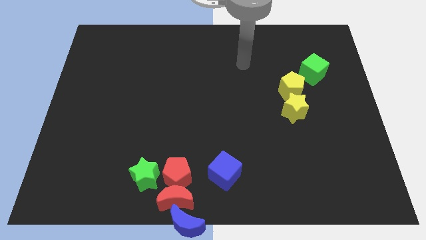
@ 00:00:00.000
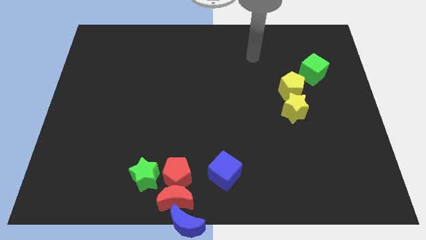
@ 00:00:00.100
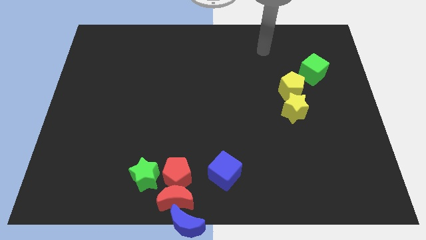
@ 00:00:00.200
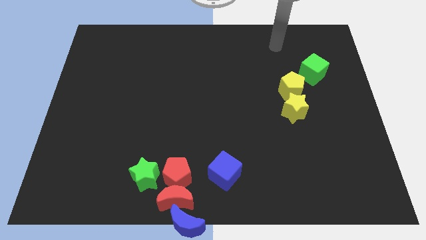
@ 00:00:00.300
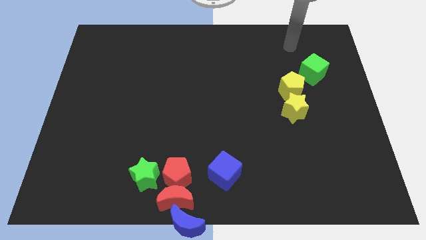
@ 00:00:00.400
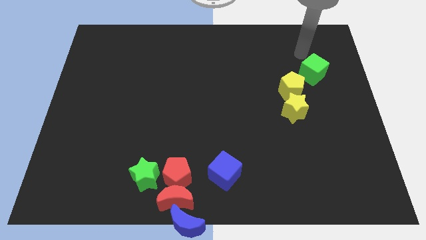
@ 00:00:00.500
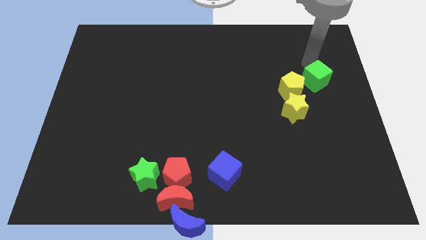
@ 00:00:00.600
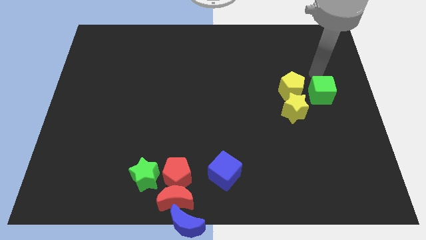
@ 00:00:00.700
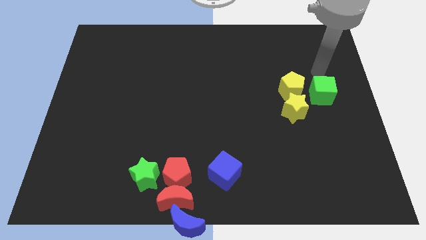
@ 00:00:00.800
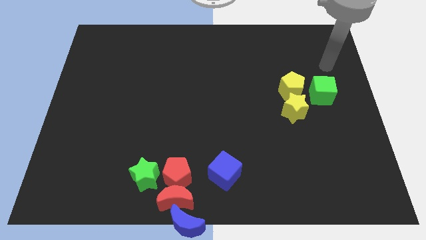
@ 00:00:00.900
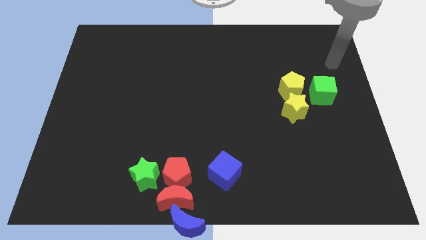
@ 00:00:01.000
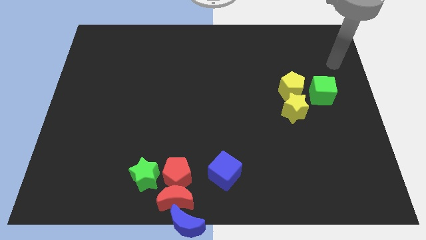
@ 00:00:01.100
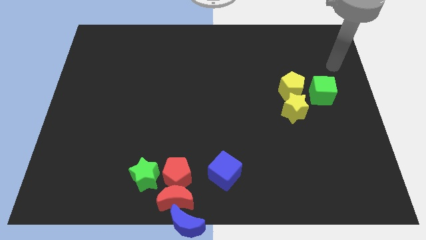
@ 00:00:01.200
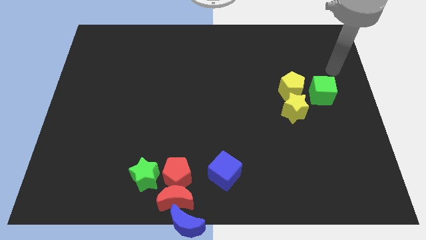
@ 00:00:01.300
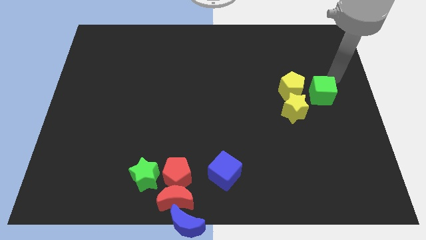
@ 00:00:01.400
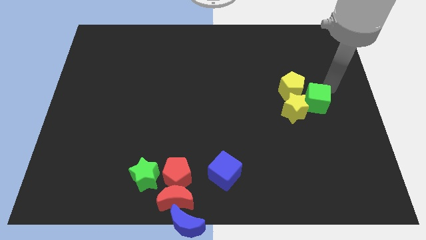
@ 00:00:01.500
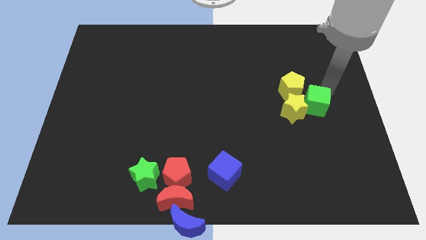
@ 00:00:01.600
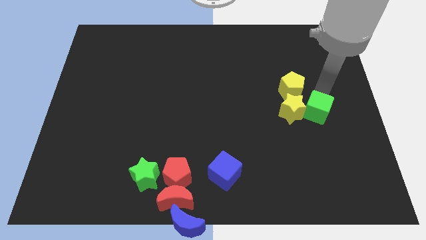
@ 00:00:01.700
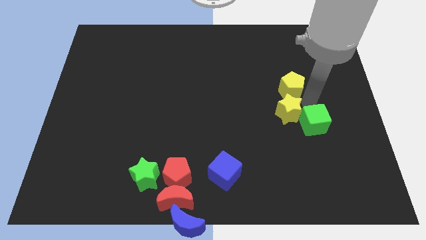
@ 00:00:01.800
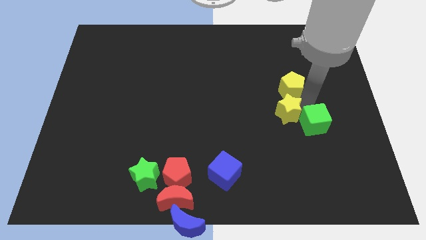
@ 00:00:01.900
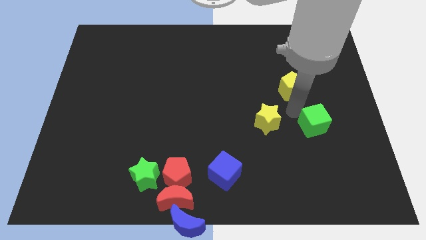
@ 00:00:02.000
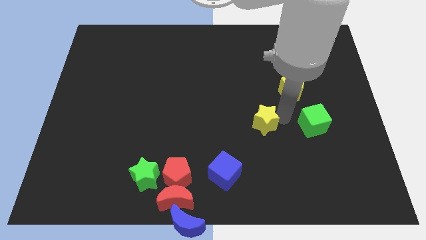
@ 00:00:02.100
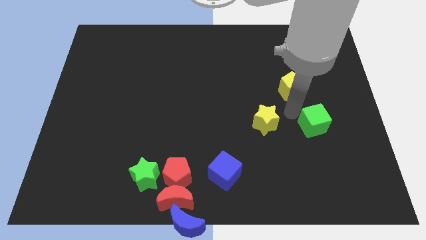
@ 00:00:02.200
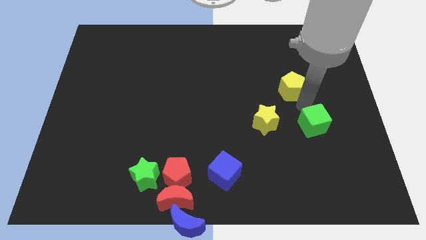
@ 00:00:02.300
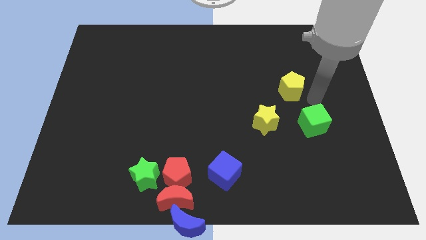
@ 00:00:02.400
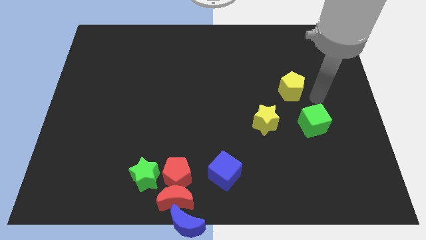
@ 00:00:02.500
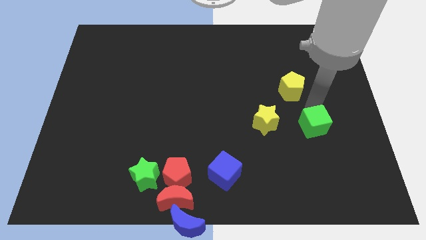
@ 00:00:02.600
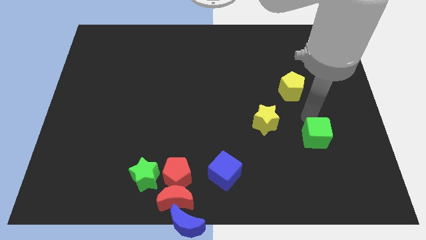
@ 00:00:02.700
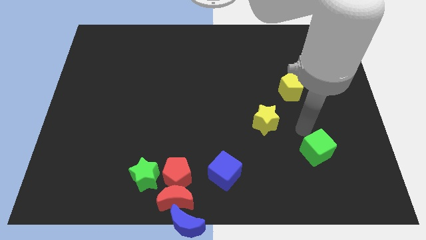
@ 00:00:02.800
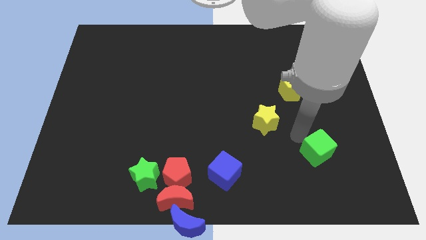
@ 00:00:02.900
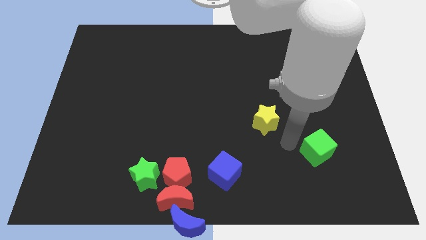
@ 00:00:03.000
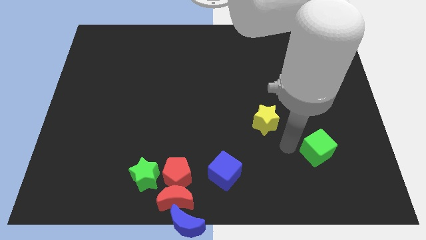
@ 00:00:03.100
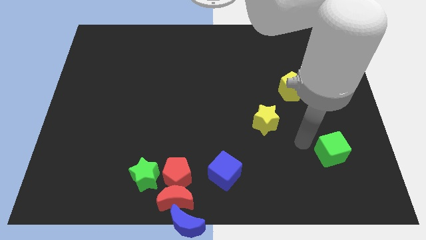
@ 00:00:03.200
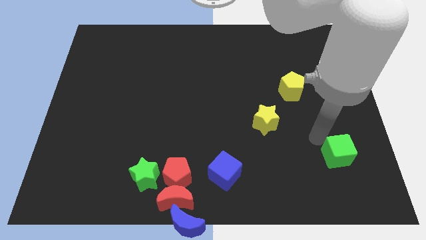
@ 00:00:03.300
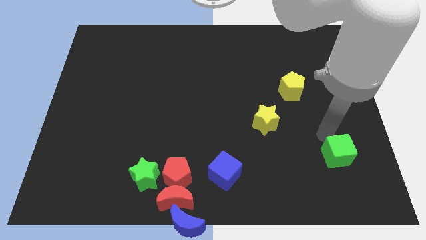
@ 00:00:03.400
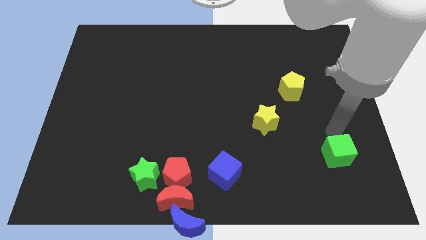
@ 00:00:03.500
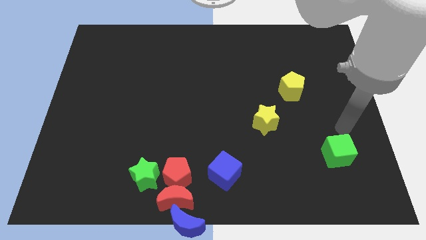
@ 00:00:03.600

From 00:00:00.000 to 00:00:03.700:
push the green cube towards down

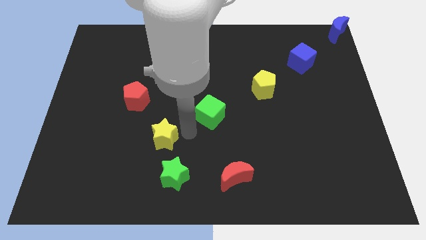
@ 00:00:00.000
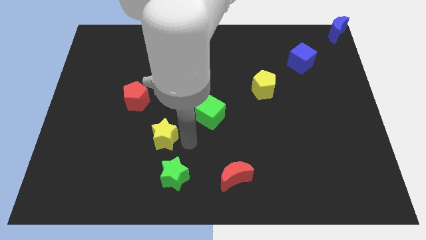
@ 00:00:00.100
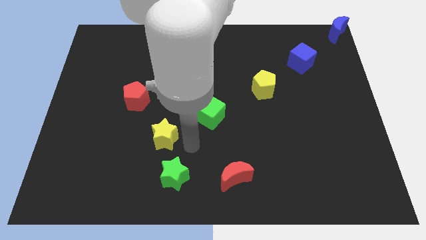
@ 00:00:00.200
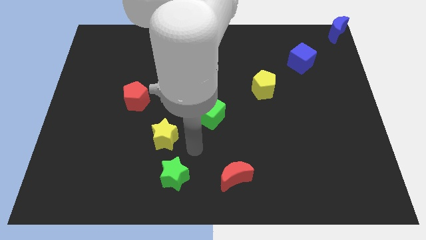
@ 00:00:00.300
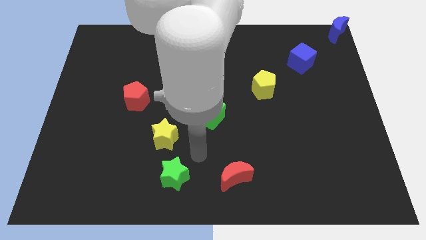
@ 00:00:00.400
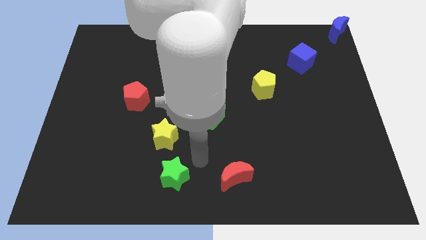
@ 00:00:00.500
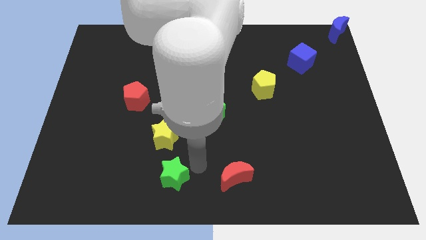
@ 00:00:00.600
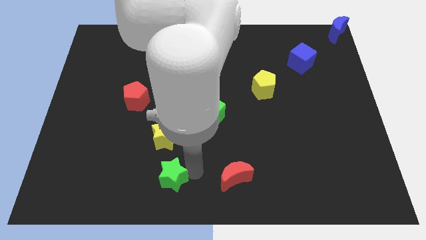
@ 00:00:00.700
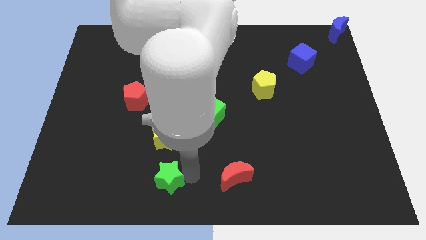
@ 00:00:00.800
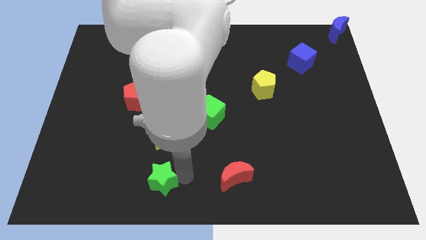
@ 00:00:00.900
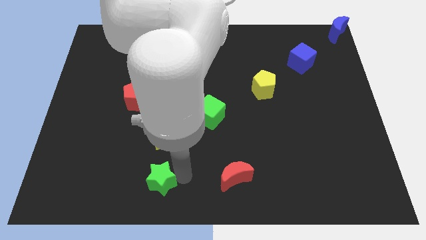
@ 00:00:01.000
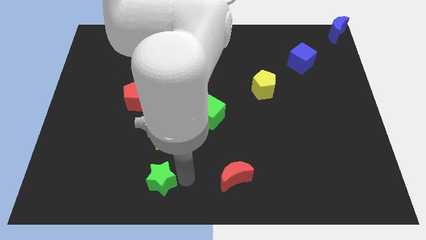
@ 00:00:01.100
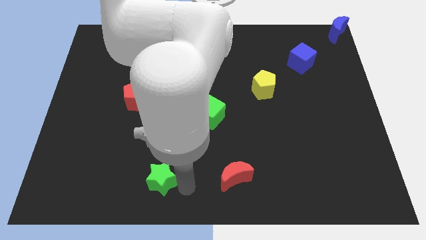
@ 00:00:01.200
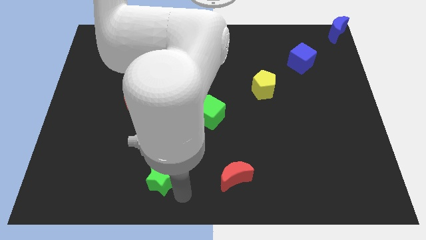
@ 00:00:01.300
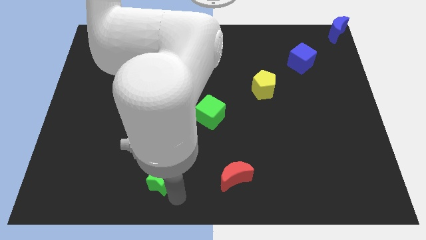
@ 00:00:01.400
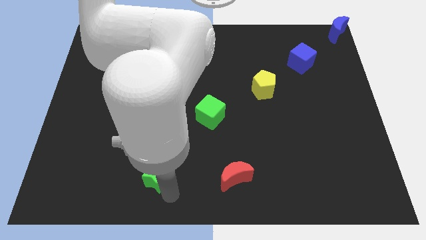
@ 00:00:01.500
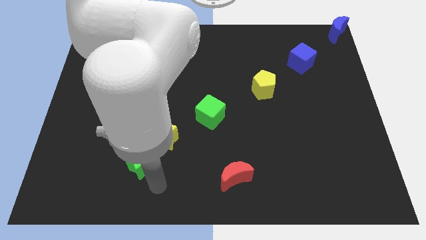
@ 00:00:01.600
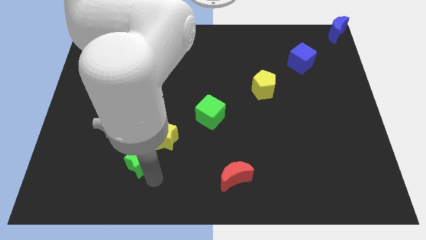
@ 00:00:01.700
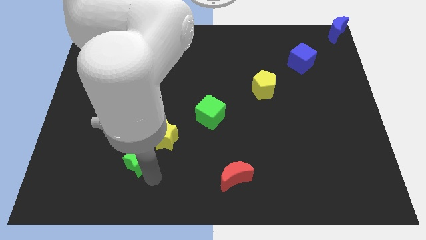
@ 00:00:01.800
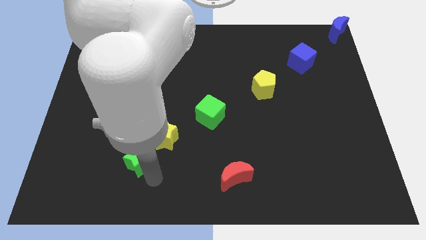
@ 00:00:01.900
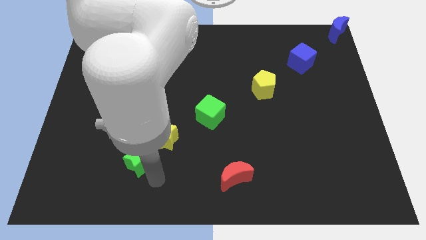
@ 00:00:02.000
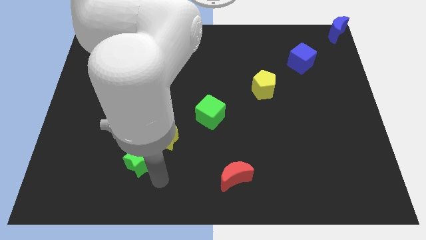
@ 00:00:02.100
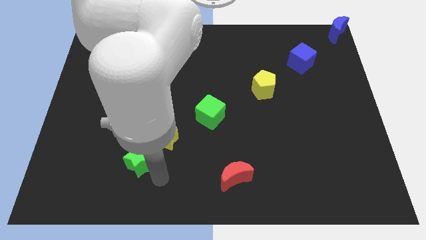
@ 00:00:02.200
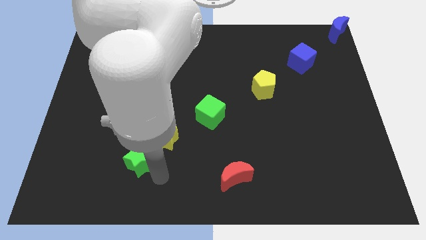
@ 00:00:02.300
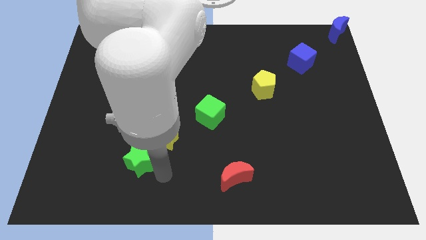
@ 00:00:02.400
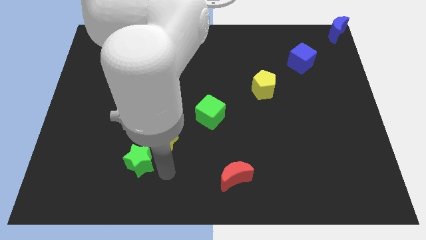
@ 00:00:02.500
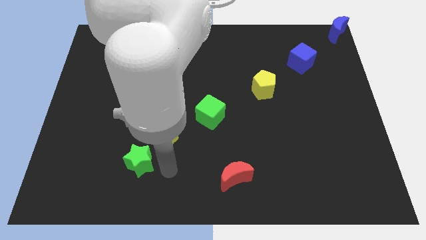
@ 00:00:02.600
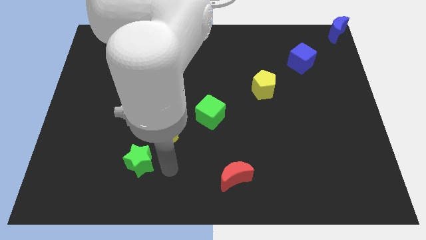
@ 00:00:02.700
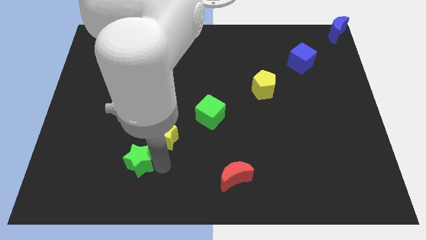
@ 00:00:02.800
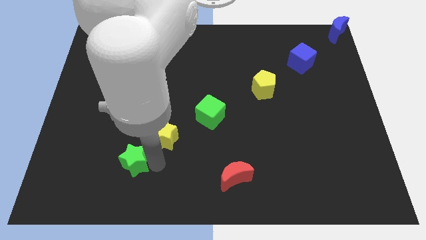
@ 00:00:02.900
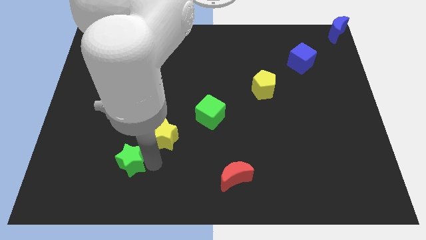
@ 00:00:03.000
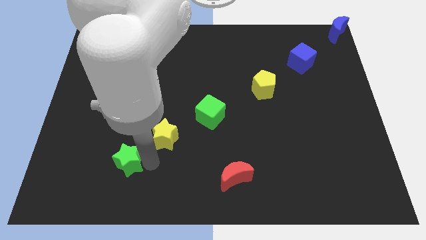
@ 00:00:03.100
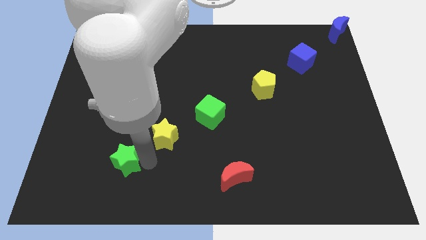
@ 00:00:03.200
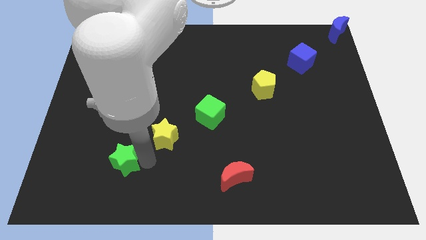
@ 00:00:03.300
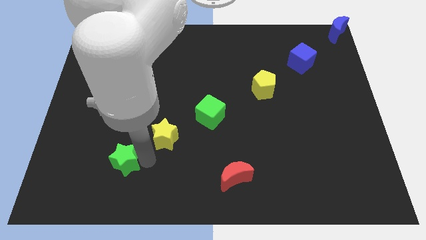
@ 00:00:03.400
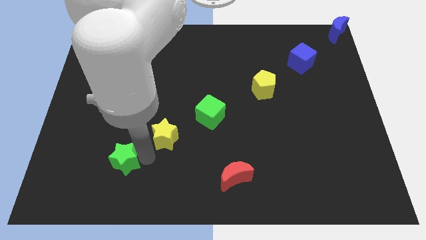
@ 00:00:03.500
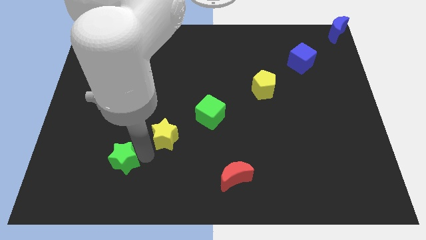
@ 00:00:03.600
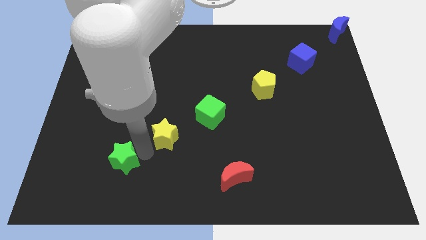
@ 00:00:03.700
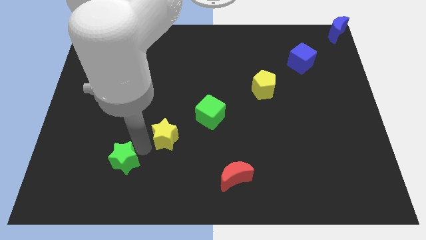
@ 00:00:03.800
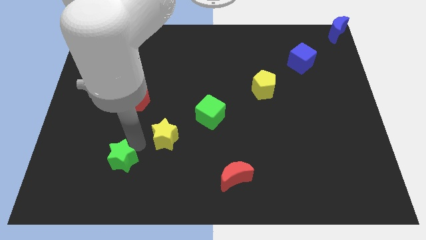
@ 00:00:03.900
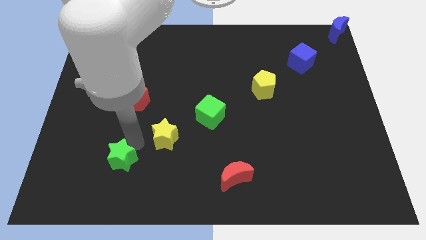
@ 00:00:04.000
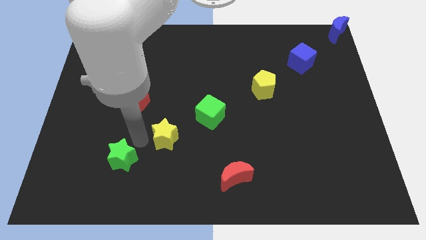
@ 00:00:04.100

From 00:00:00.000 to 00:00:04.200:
slide the green star to the bottom left of the yellow star

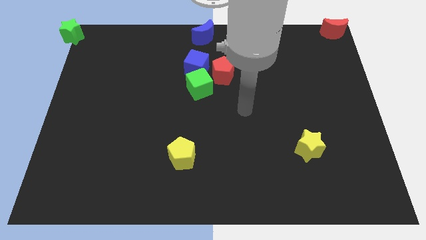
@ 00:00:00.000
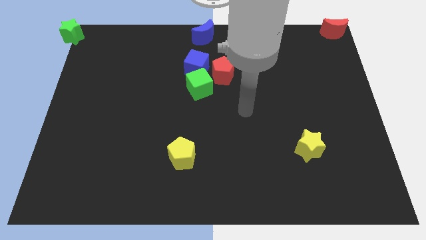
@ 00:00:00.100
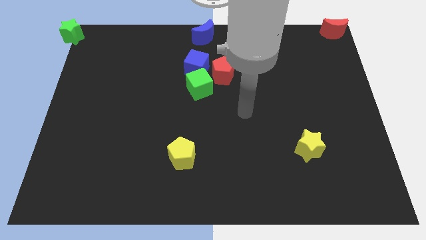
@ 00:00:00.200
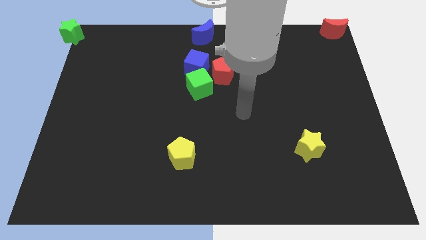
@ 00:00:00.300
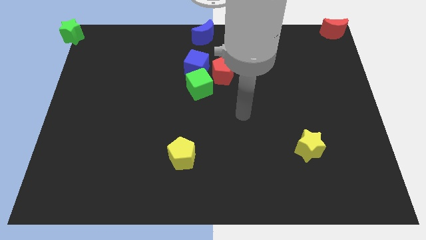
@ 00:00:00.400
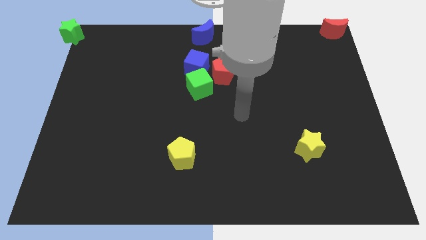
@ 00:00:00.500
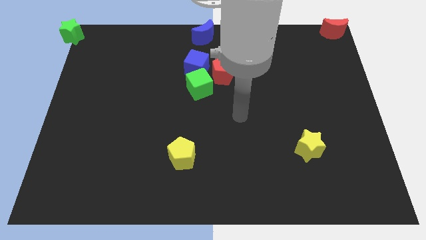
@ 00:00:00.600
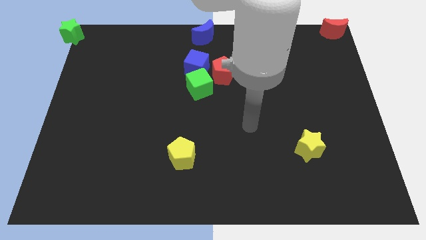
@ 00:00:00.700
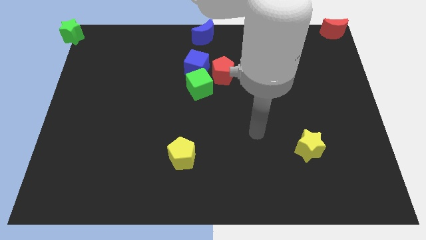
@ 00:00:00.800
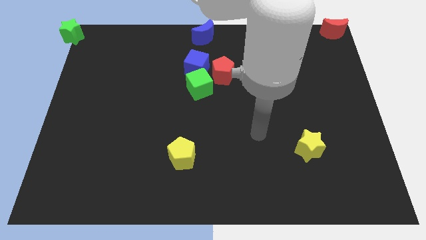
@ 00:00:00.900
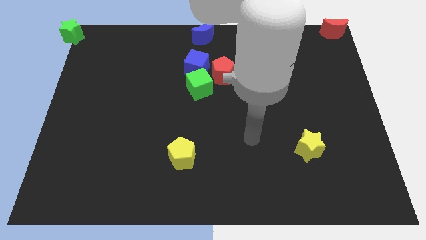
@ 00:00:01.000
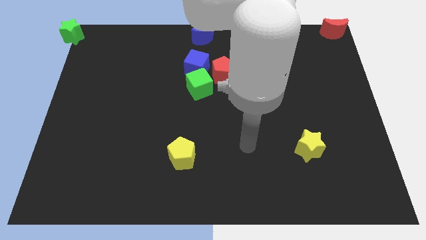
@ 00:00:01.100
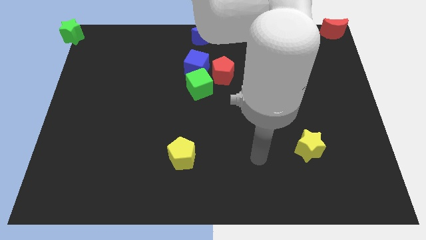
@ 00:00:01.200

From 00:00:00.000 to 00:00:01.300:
move your hand in between the yellow pentagon and yellow star
